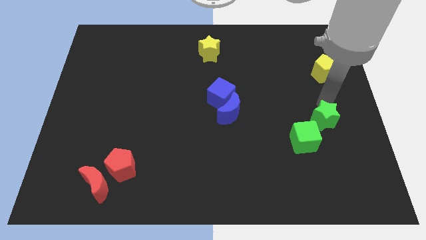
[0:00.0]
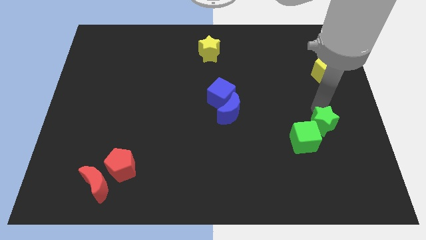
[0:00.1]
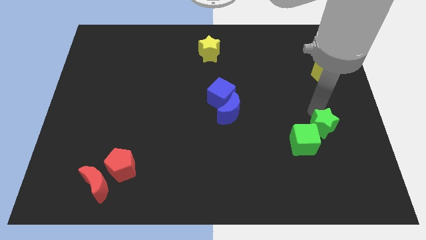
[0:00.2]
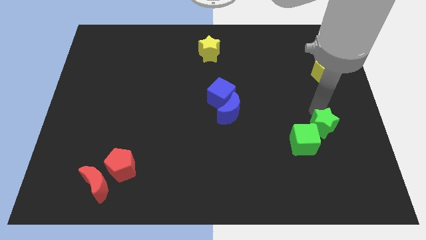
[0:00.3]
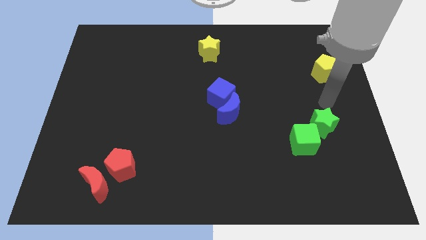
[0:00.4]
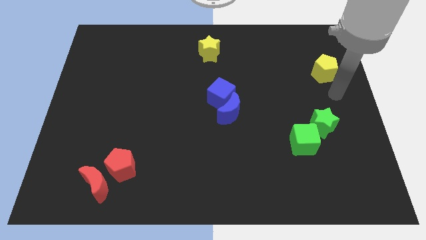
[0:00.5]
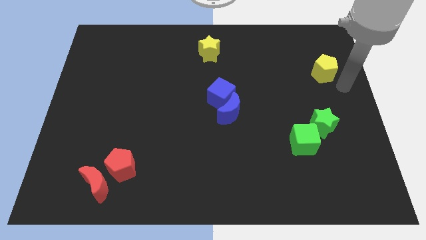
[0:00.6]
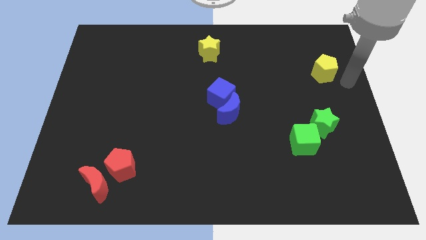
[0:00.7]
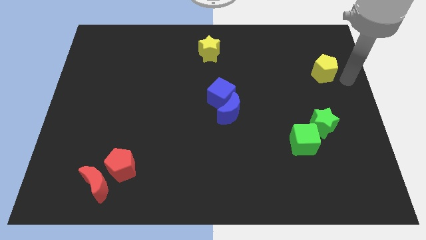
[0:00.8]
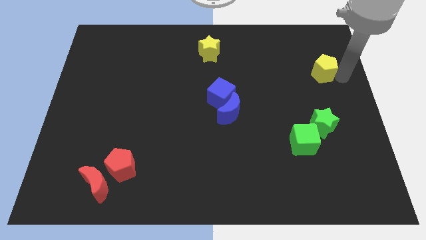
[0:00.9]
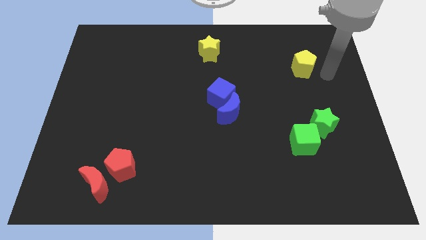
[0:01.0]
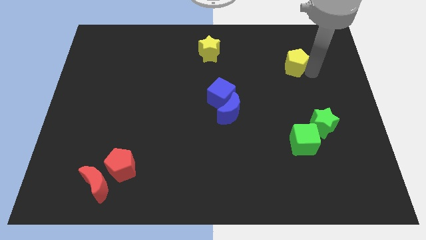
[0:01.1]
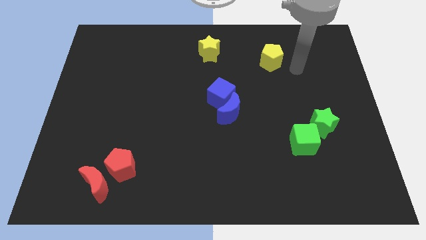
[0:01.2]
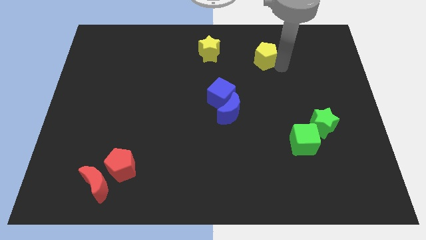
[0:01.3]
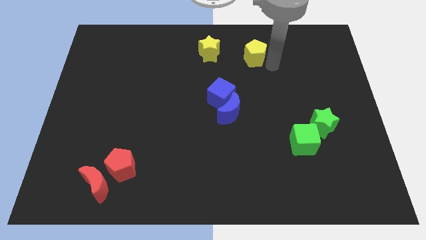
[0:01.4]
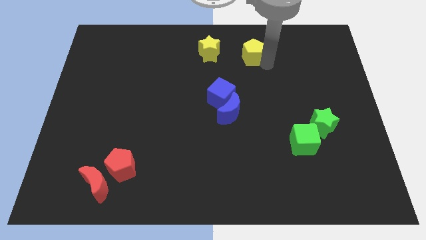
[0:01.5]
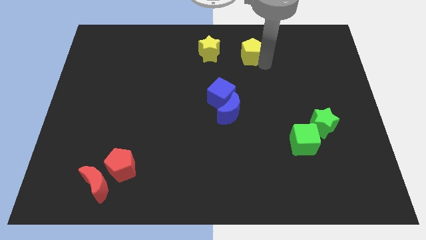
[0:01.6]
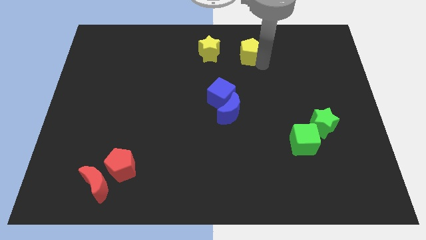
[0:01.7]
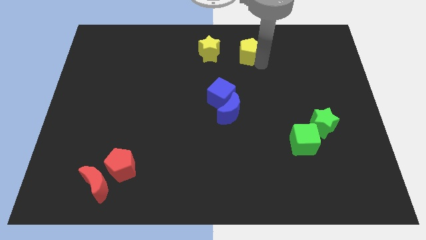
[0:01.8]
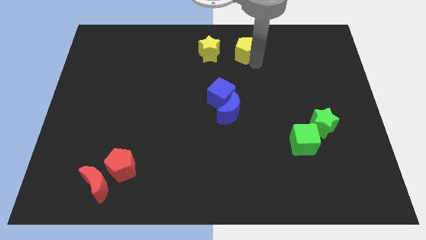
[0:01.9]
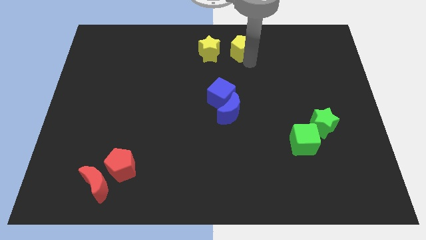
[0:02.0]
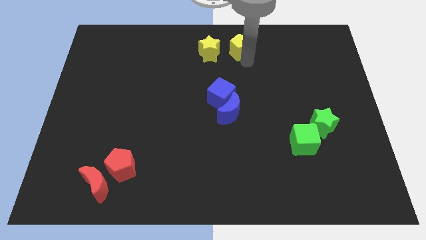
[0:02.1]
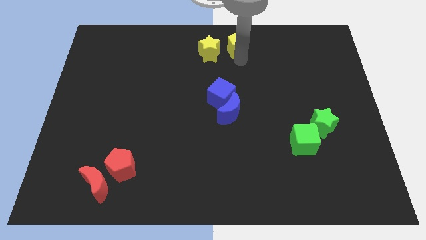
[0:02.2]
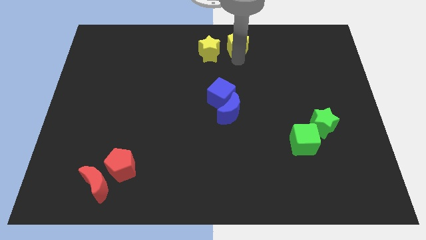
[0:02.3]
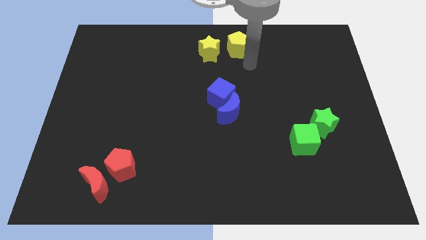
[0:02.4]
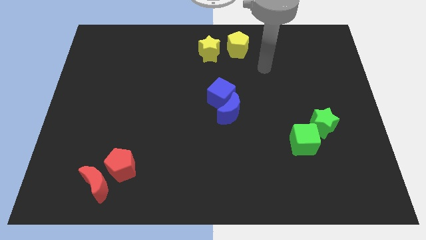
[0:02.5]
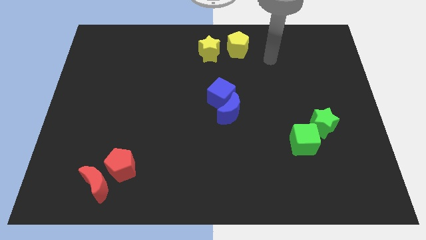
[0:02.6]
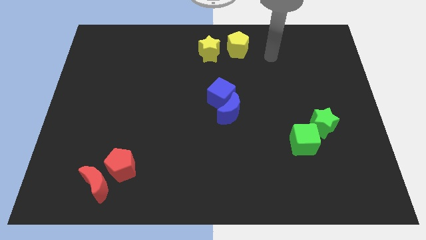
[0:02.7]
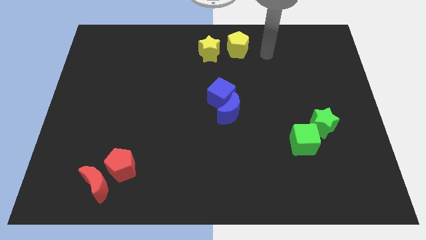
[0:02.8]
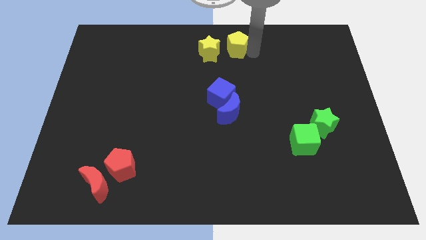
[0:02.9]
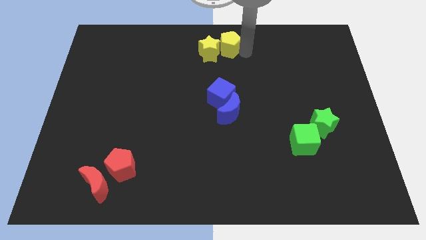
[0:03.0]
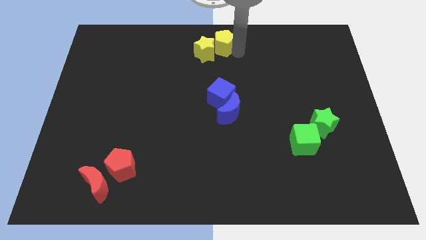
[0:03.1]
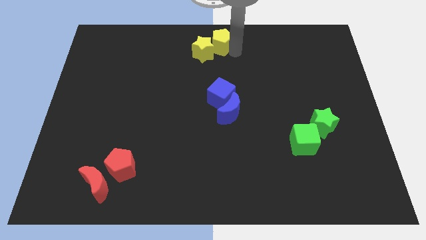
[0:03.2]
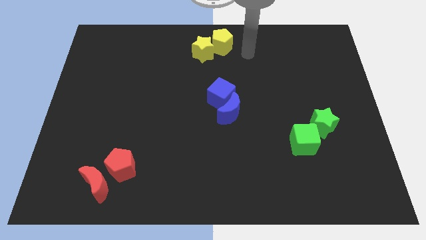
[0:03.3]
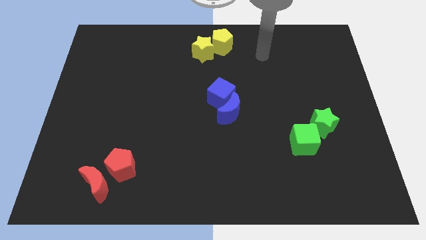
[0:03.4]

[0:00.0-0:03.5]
push the yellow pentagon into the yellow star

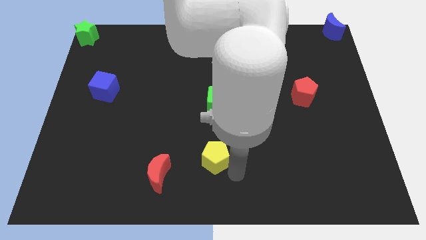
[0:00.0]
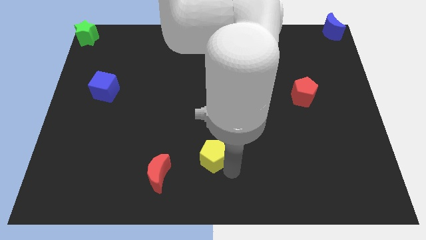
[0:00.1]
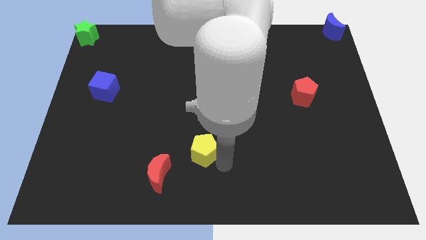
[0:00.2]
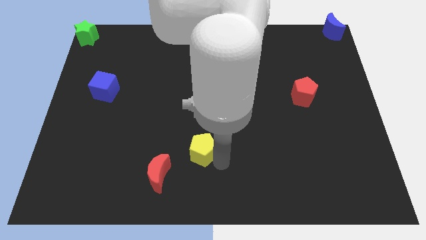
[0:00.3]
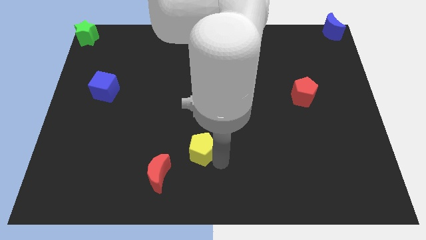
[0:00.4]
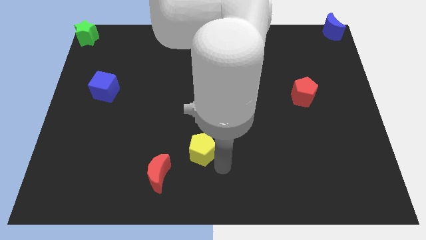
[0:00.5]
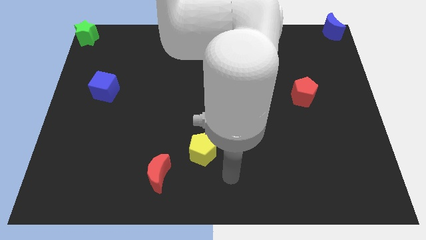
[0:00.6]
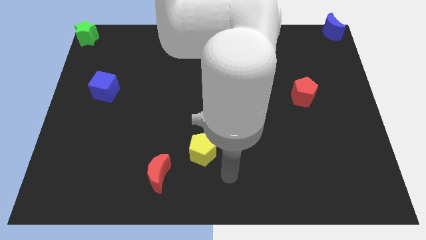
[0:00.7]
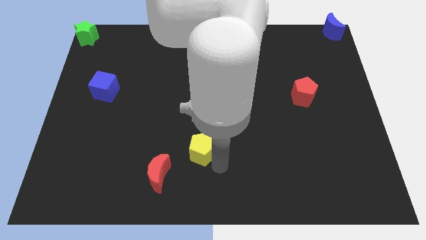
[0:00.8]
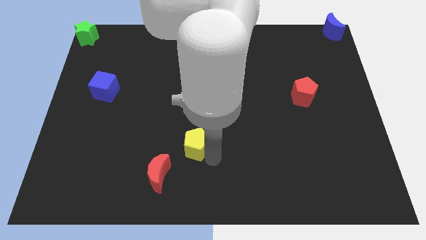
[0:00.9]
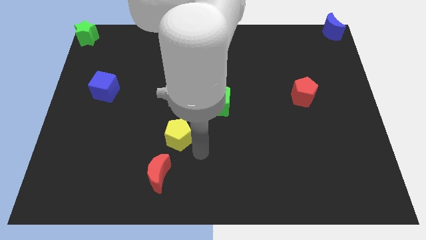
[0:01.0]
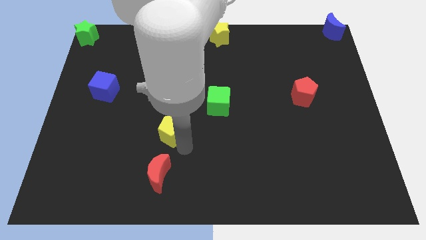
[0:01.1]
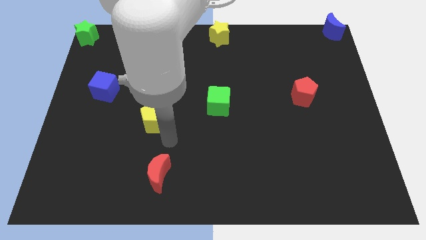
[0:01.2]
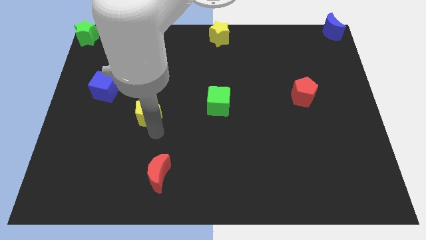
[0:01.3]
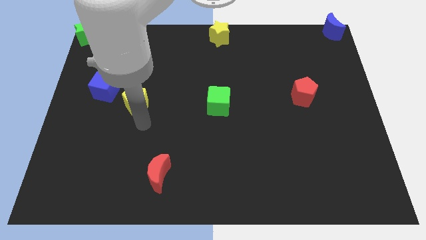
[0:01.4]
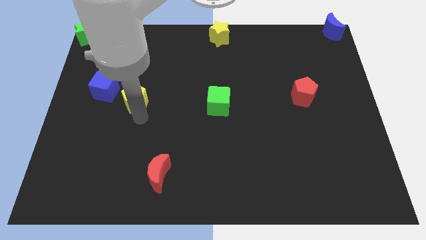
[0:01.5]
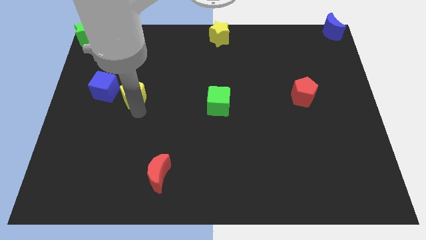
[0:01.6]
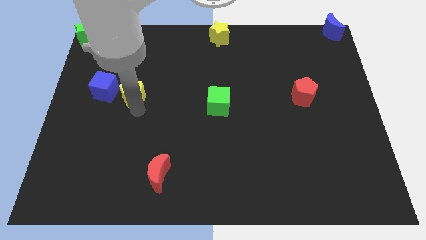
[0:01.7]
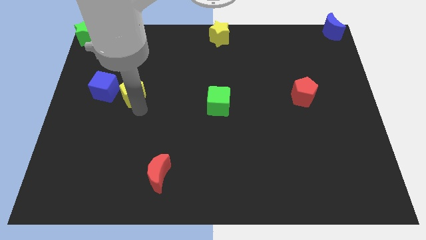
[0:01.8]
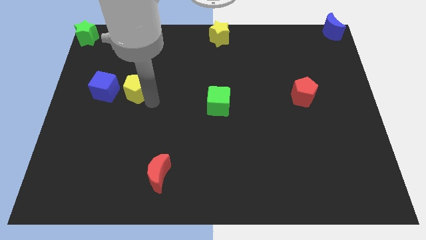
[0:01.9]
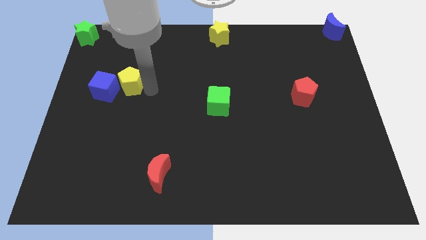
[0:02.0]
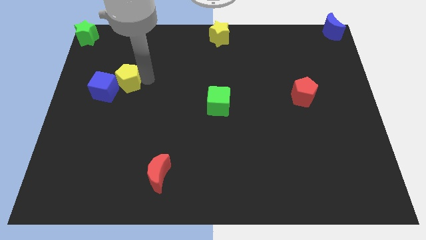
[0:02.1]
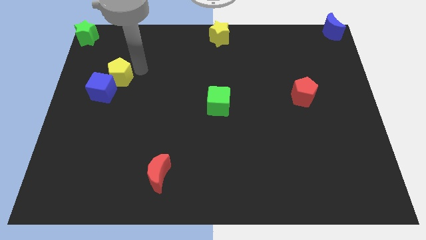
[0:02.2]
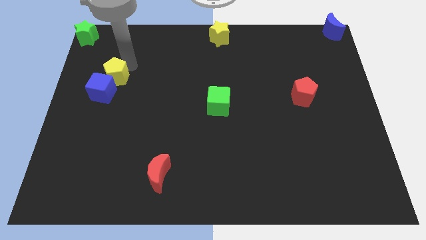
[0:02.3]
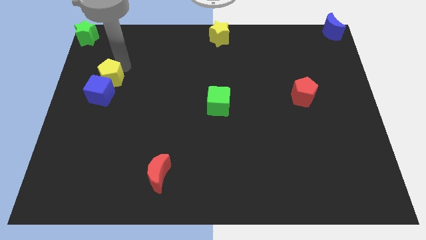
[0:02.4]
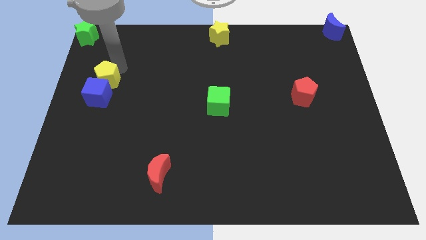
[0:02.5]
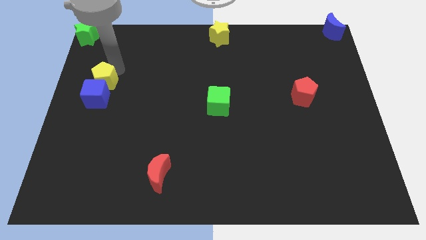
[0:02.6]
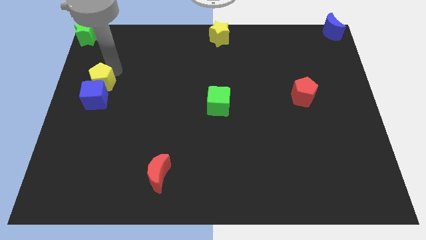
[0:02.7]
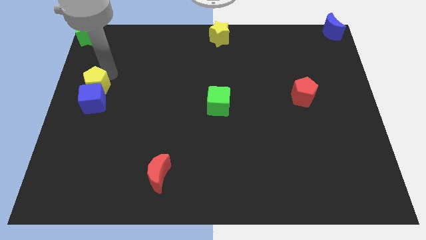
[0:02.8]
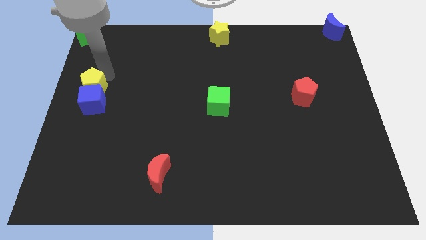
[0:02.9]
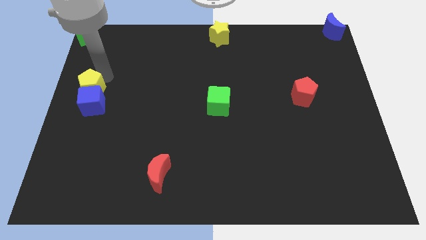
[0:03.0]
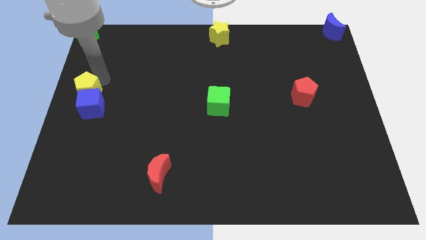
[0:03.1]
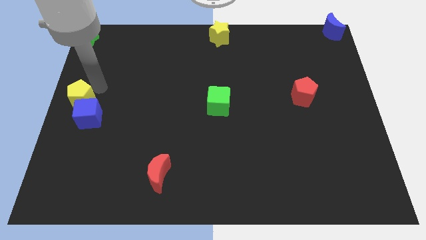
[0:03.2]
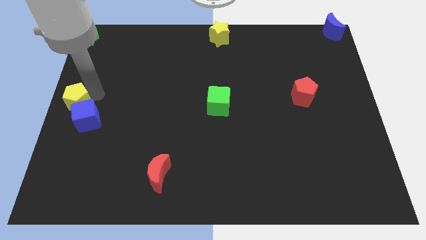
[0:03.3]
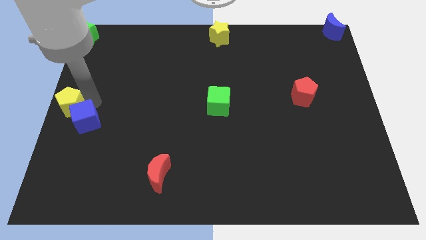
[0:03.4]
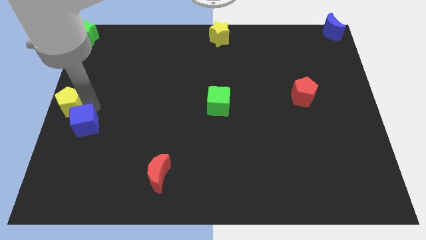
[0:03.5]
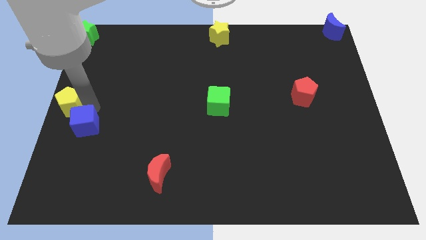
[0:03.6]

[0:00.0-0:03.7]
put the yellow pentagon into the blue cube

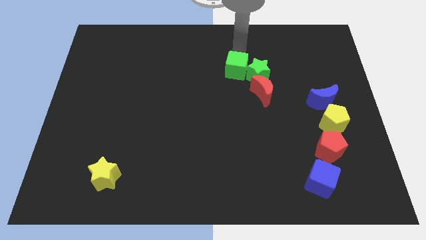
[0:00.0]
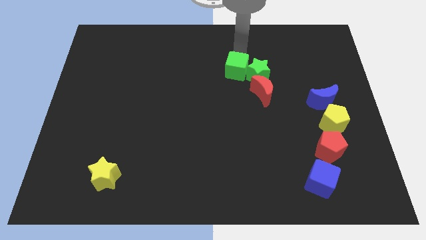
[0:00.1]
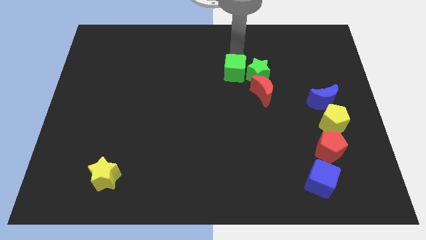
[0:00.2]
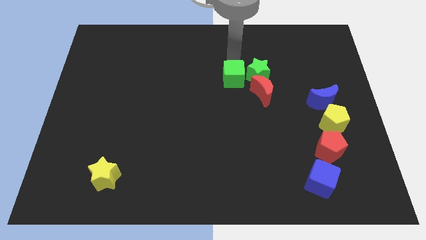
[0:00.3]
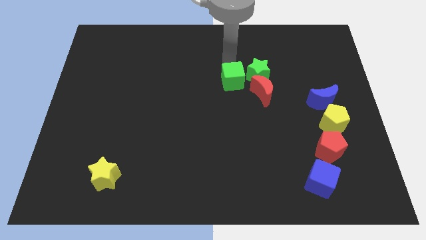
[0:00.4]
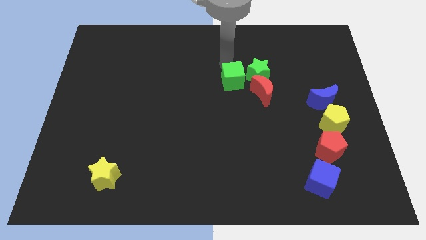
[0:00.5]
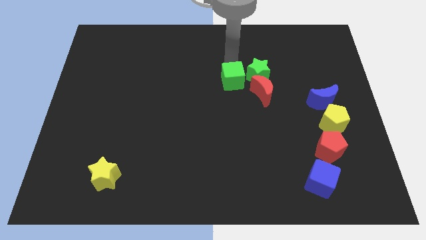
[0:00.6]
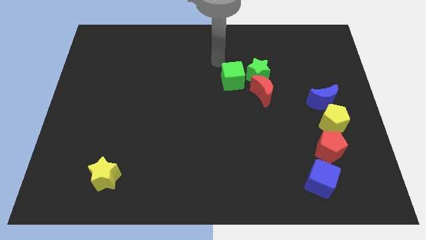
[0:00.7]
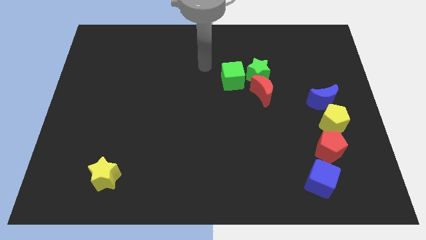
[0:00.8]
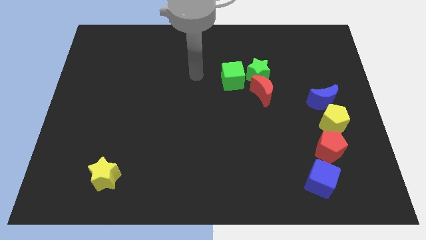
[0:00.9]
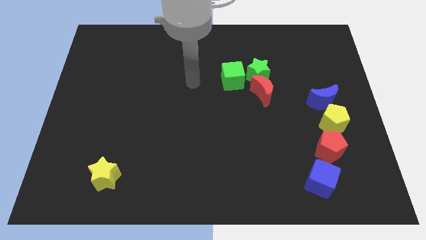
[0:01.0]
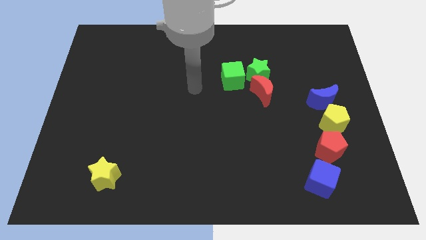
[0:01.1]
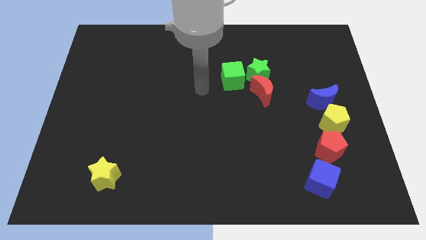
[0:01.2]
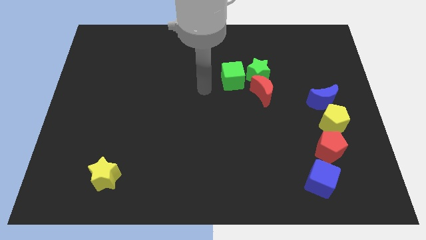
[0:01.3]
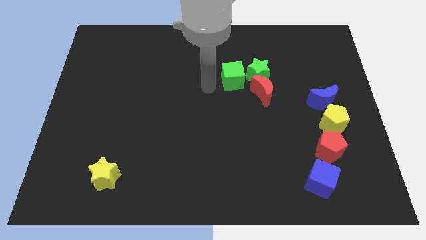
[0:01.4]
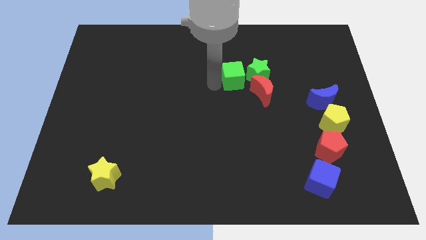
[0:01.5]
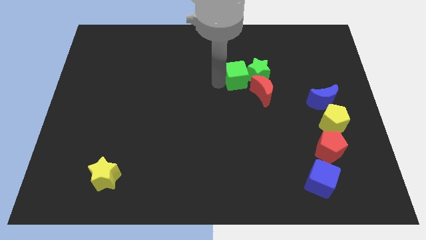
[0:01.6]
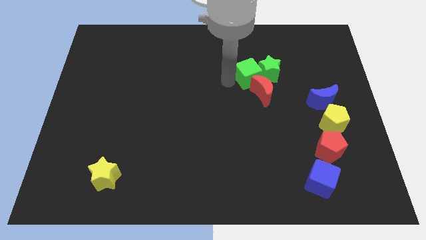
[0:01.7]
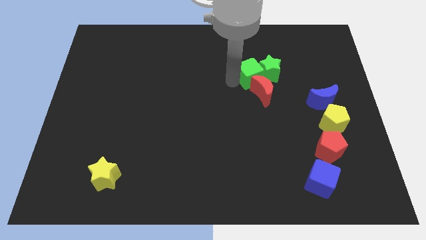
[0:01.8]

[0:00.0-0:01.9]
push the green cube vertically above the red moon
